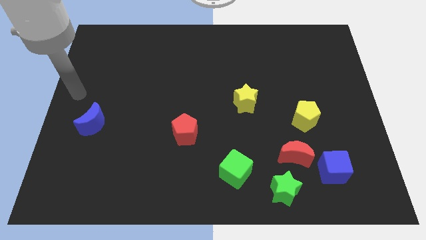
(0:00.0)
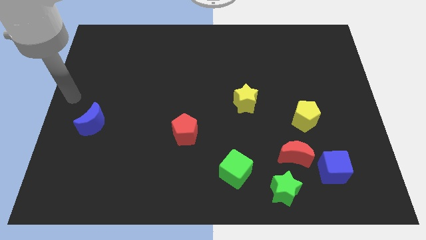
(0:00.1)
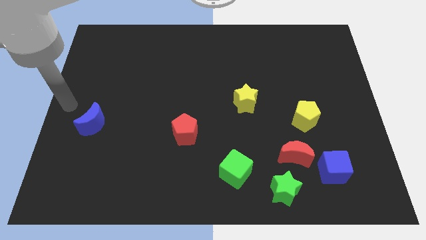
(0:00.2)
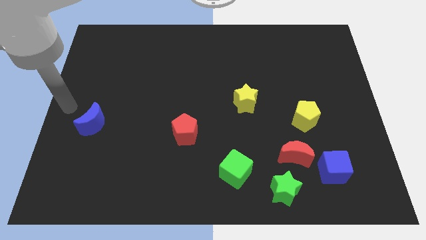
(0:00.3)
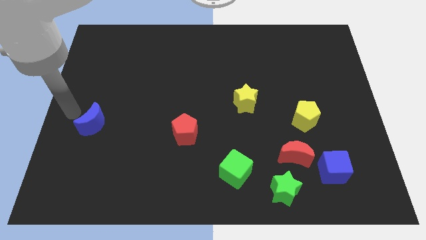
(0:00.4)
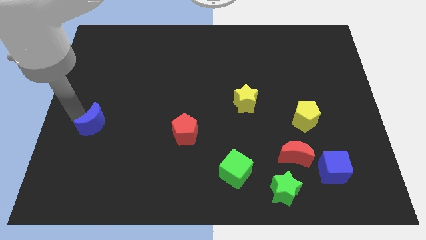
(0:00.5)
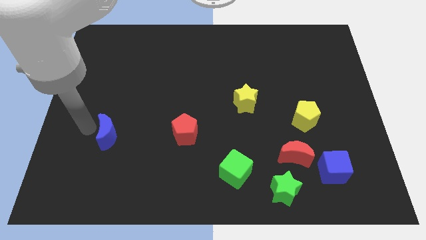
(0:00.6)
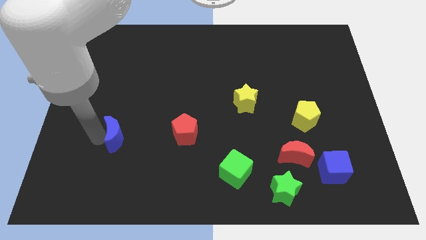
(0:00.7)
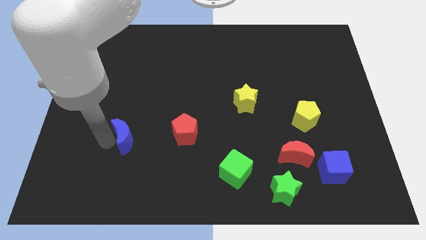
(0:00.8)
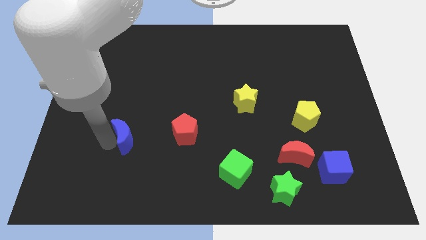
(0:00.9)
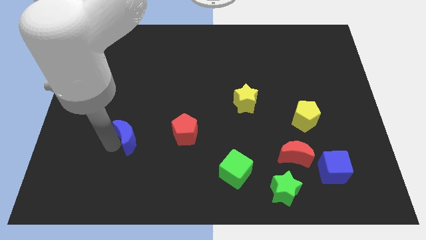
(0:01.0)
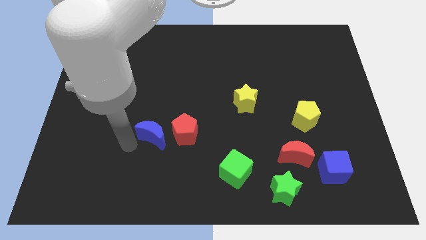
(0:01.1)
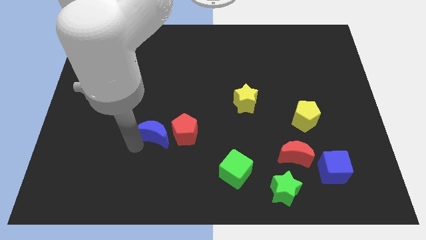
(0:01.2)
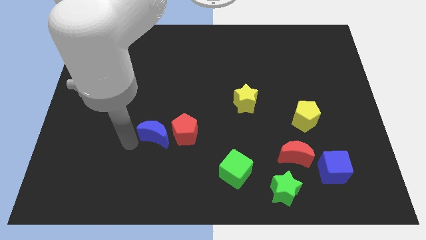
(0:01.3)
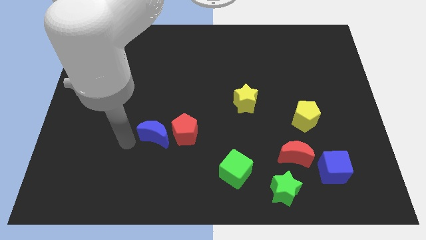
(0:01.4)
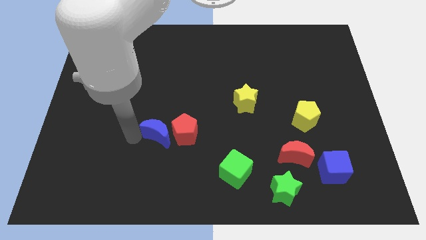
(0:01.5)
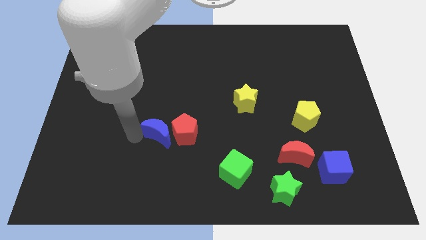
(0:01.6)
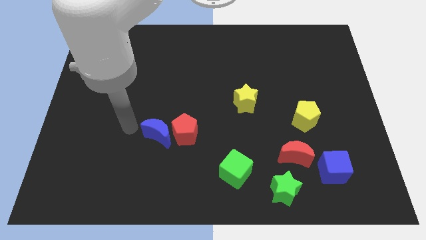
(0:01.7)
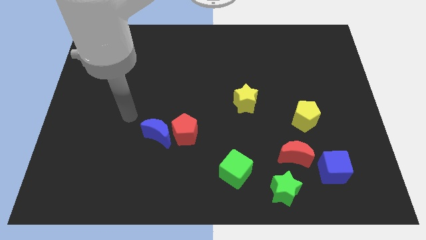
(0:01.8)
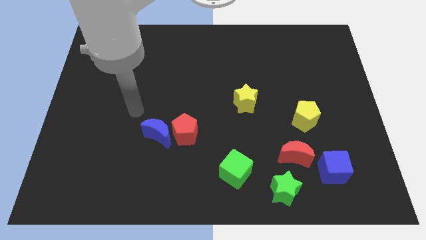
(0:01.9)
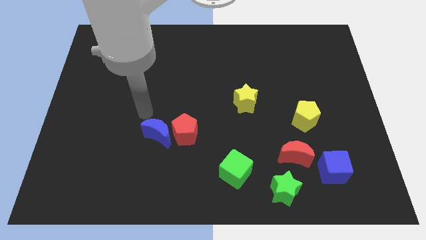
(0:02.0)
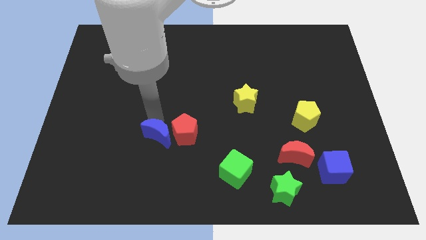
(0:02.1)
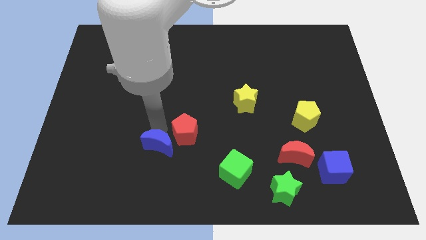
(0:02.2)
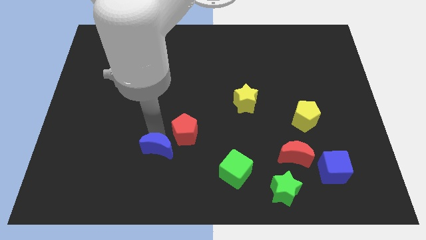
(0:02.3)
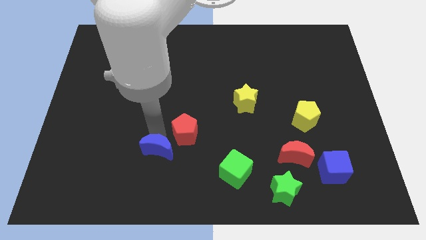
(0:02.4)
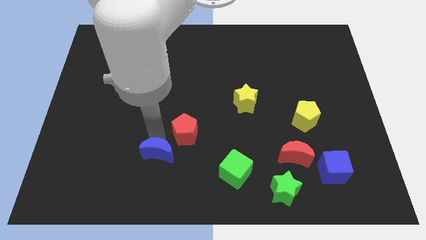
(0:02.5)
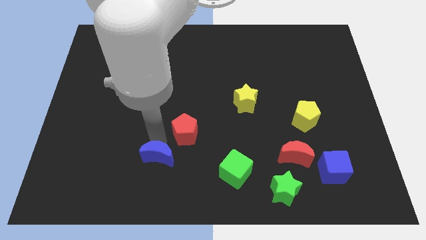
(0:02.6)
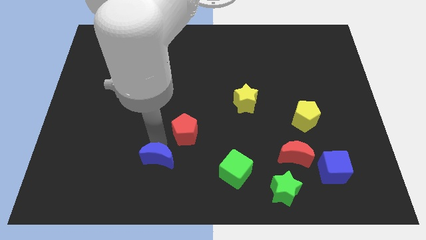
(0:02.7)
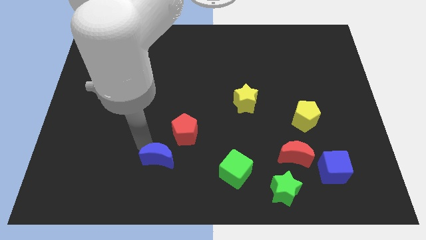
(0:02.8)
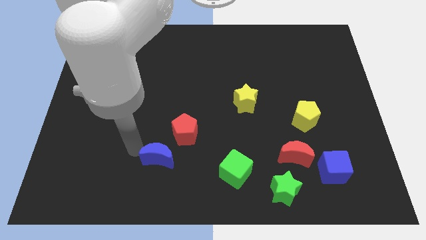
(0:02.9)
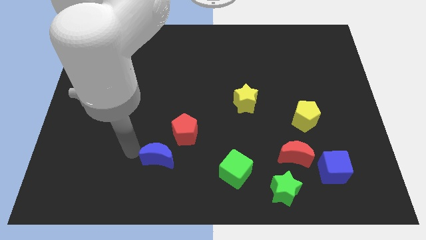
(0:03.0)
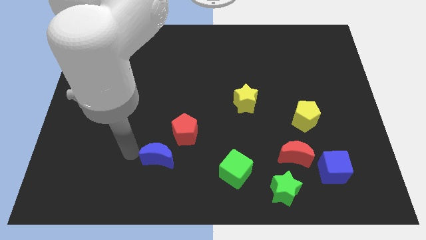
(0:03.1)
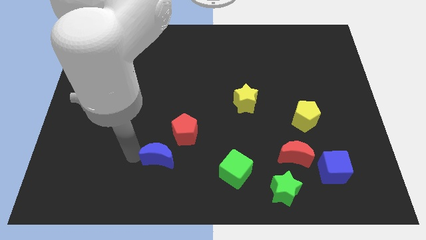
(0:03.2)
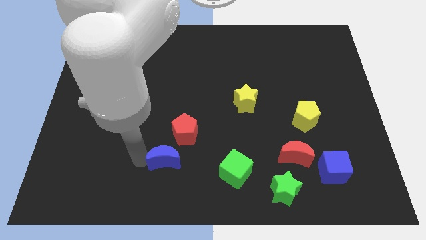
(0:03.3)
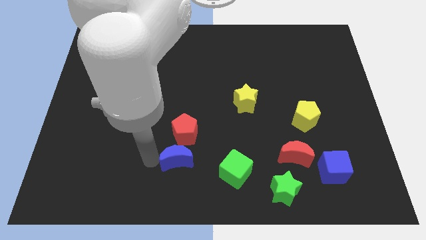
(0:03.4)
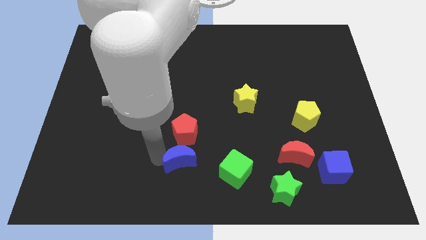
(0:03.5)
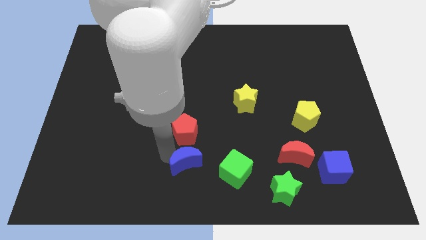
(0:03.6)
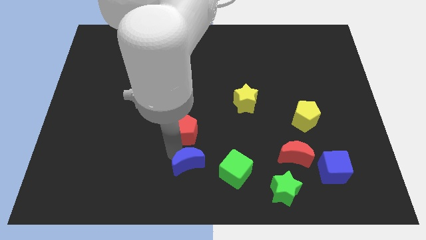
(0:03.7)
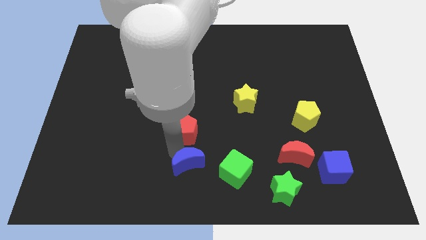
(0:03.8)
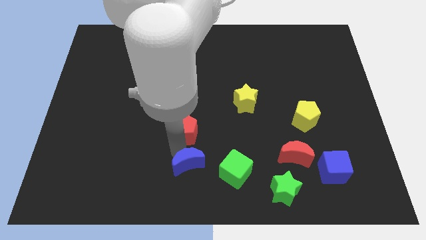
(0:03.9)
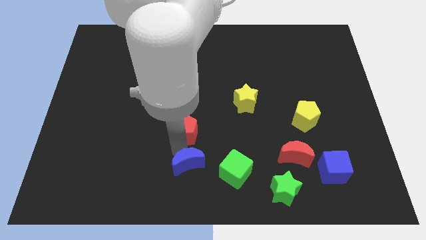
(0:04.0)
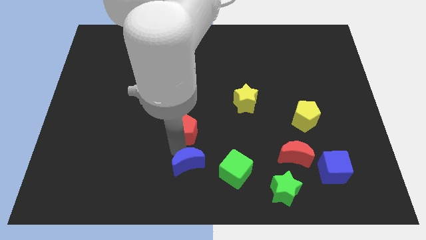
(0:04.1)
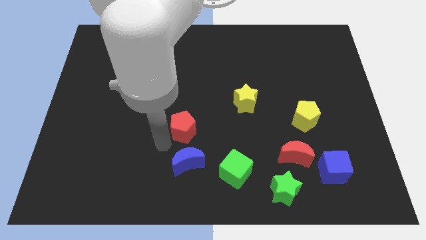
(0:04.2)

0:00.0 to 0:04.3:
place blue moon below red pentagon

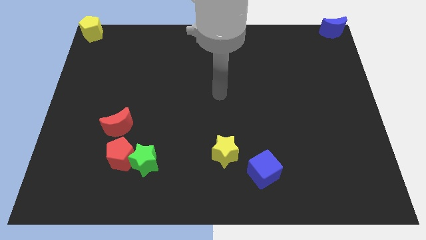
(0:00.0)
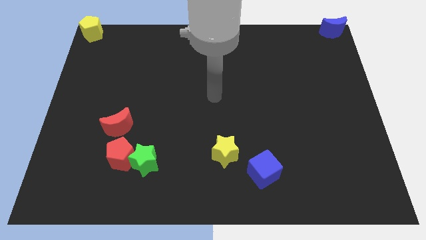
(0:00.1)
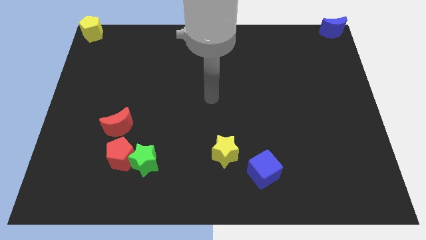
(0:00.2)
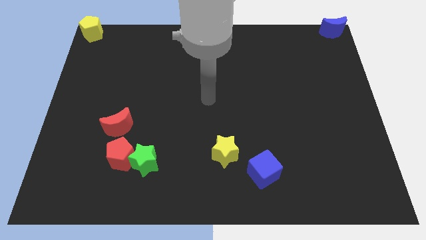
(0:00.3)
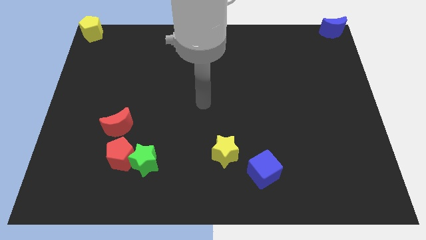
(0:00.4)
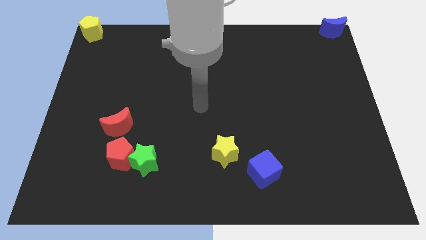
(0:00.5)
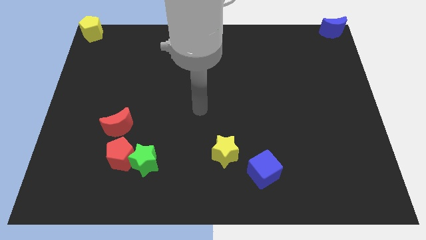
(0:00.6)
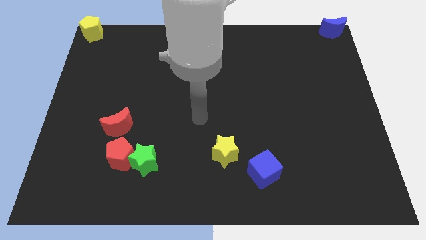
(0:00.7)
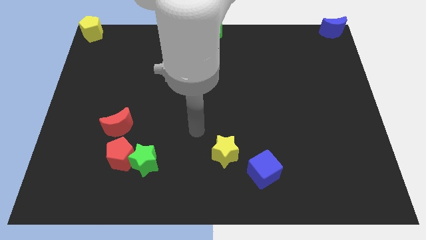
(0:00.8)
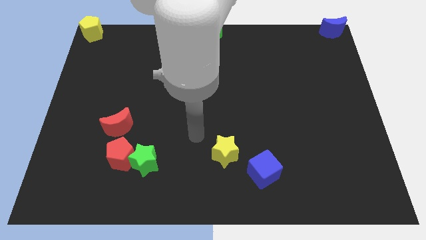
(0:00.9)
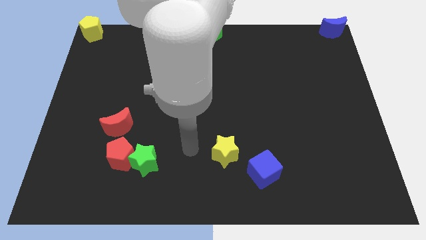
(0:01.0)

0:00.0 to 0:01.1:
place your arm in between yellow star and green star

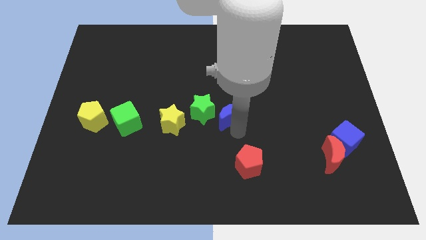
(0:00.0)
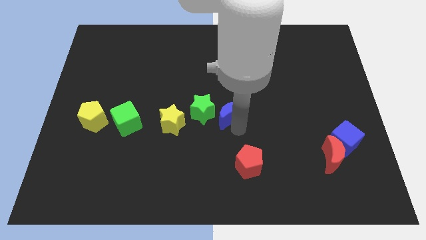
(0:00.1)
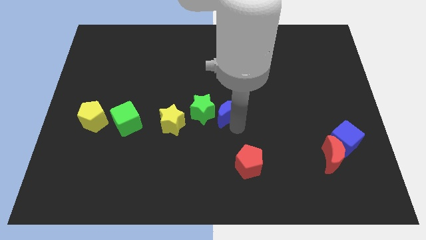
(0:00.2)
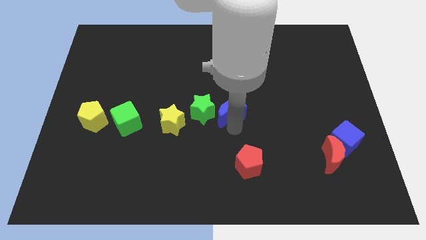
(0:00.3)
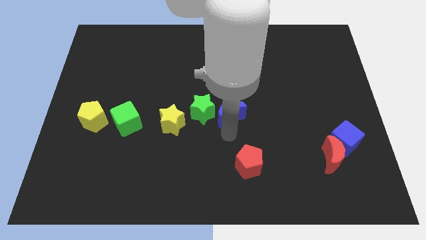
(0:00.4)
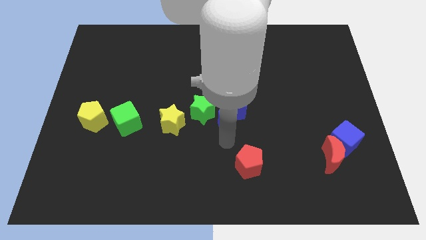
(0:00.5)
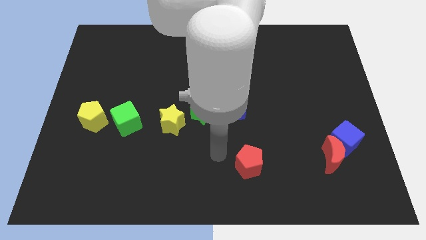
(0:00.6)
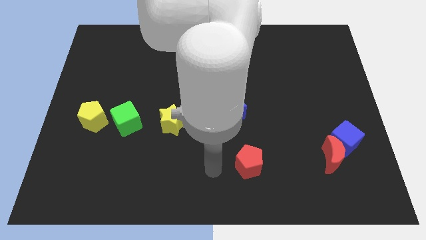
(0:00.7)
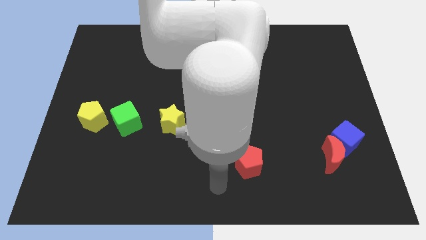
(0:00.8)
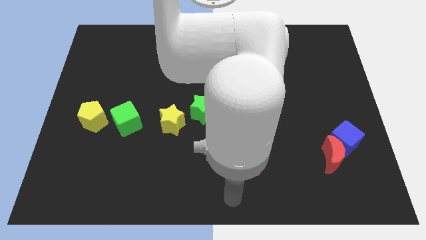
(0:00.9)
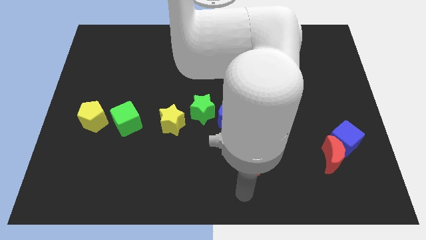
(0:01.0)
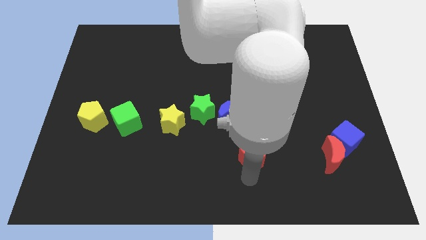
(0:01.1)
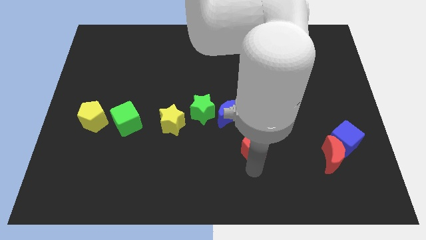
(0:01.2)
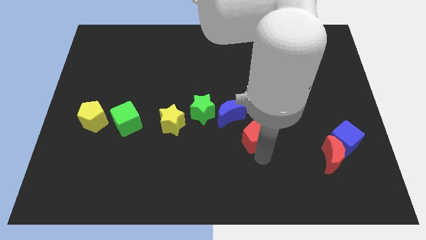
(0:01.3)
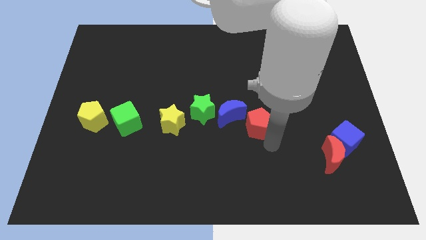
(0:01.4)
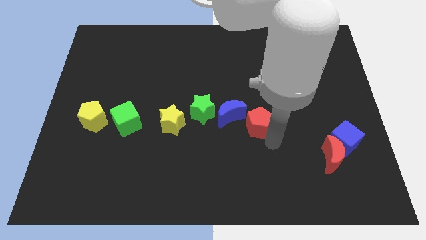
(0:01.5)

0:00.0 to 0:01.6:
move red pentagon slightly up

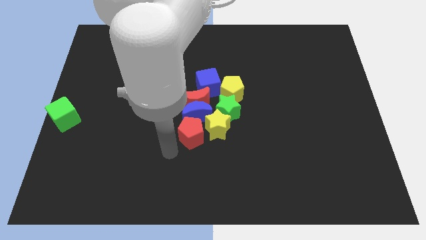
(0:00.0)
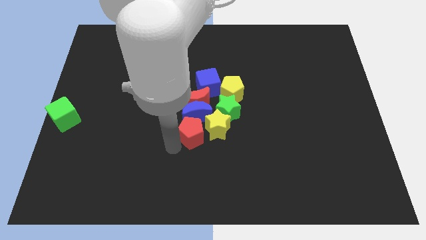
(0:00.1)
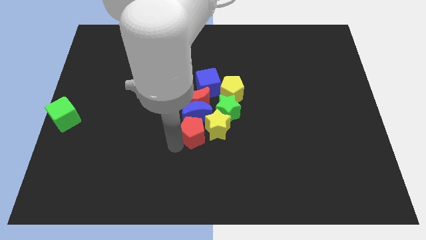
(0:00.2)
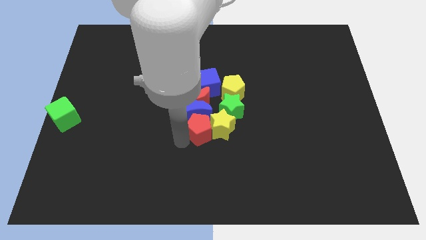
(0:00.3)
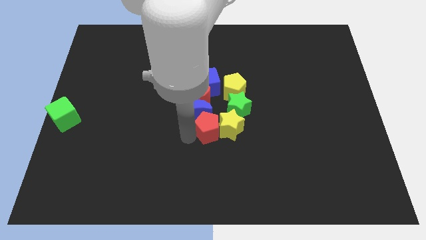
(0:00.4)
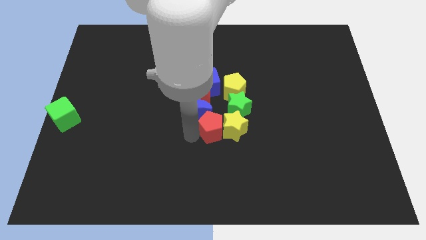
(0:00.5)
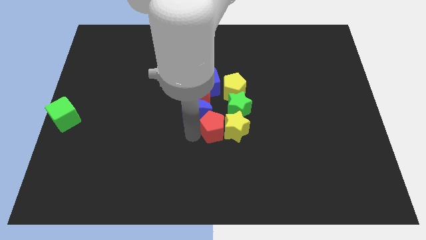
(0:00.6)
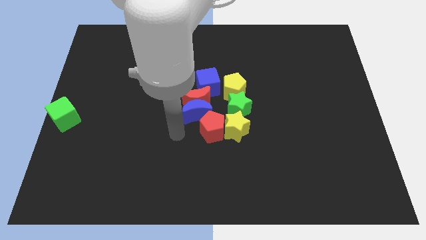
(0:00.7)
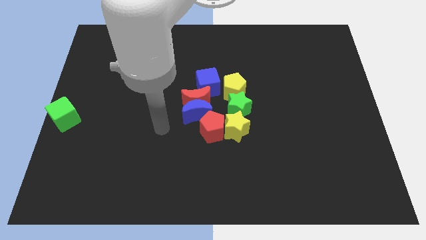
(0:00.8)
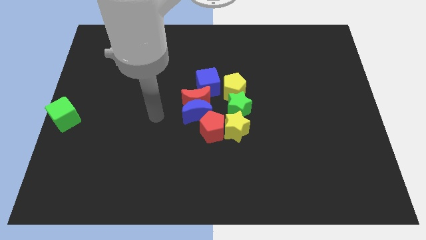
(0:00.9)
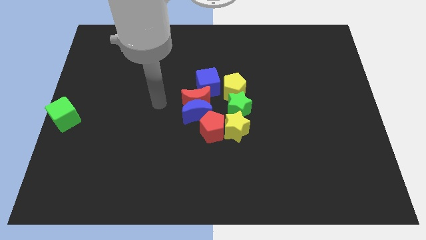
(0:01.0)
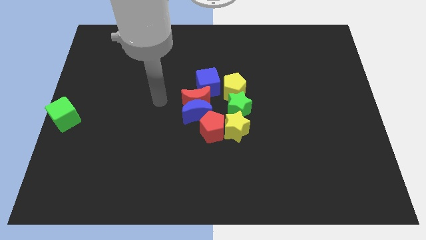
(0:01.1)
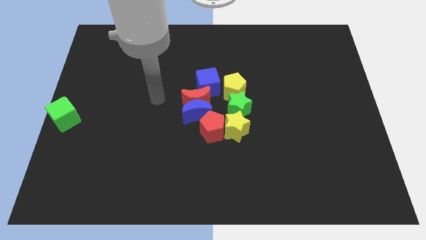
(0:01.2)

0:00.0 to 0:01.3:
push the red pentagon into the left side of the yellow star

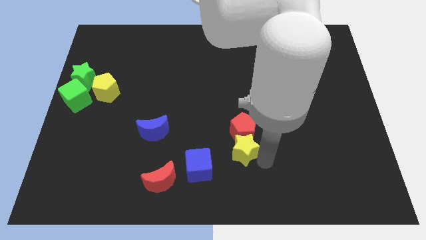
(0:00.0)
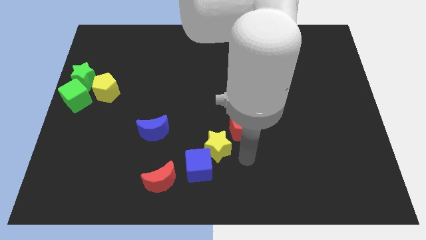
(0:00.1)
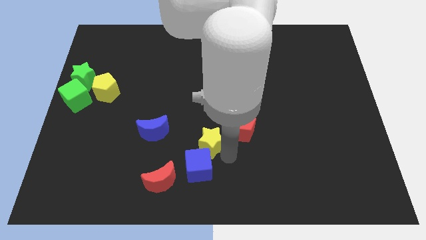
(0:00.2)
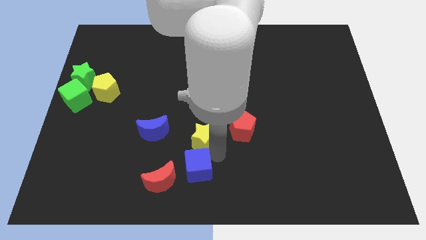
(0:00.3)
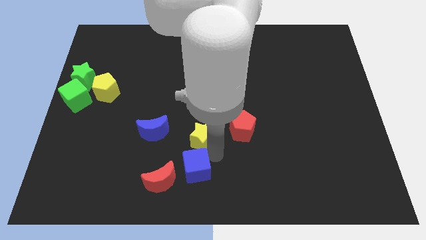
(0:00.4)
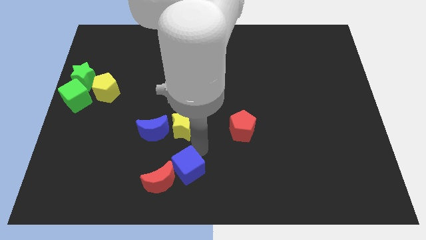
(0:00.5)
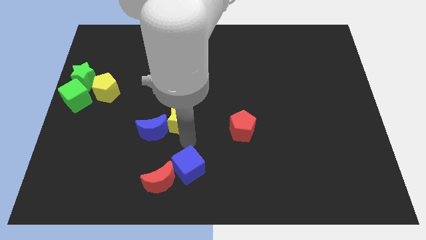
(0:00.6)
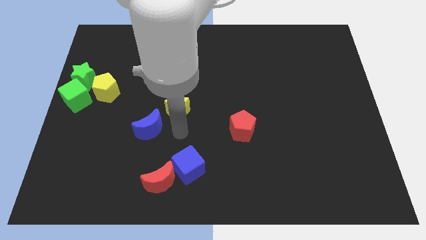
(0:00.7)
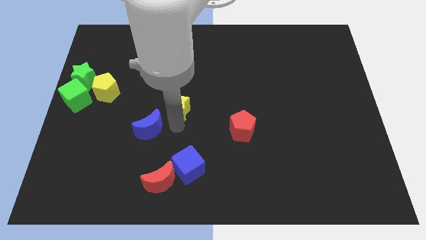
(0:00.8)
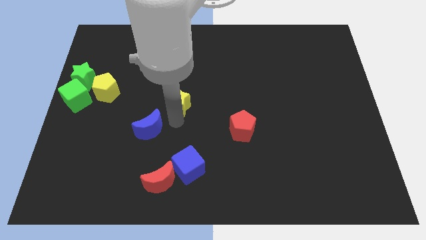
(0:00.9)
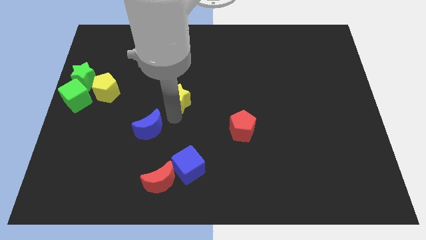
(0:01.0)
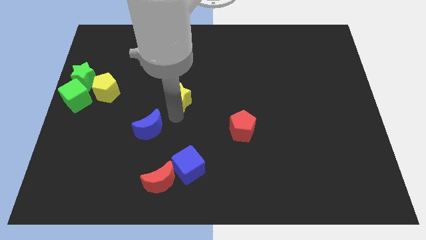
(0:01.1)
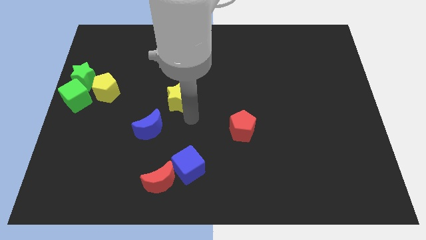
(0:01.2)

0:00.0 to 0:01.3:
separate yellow star from the red pentagon
